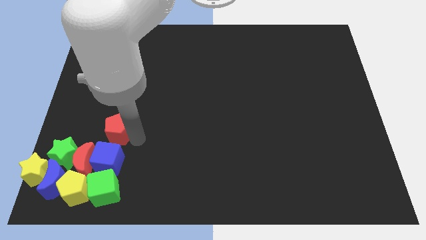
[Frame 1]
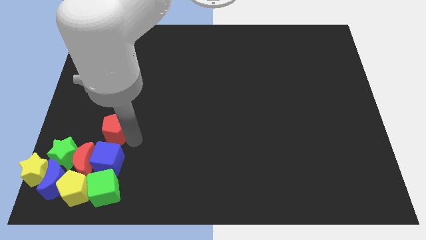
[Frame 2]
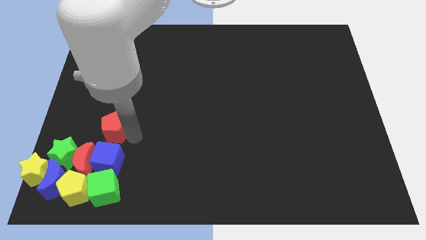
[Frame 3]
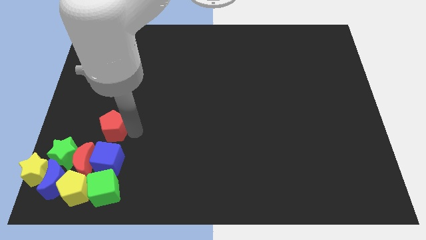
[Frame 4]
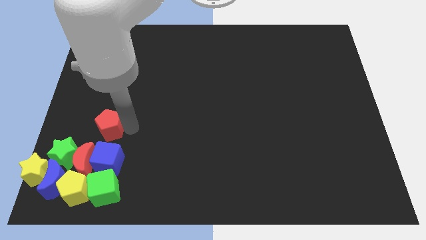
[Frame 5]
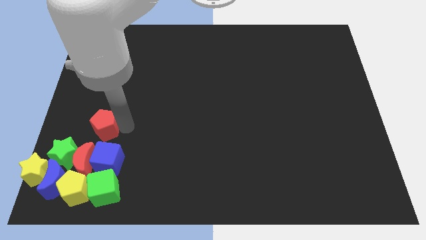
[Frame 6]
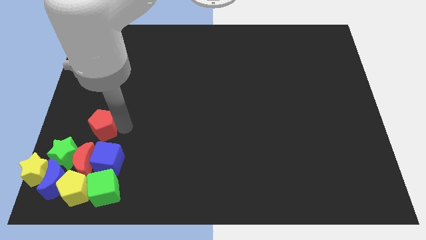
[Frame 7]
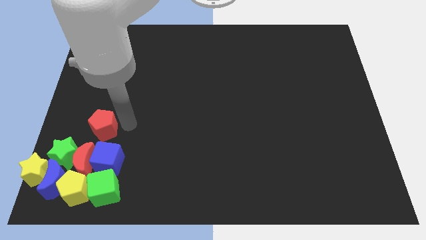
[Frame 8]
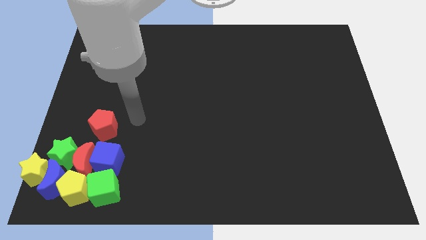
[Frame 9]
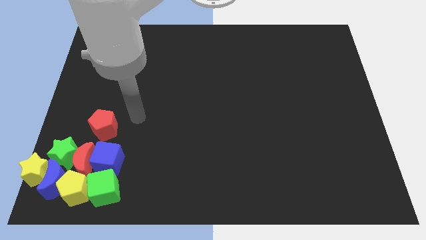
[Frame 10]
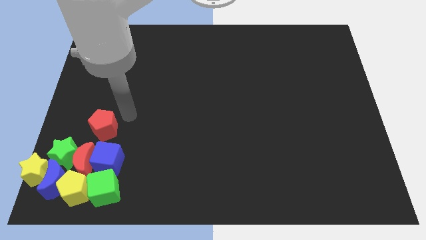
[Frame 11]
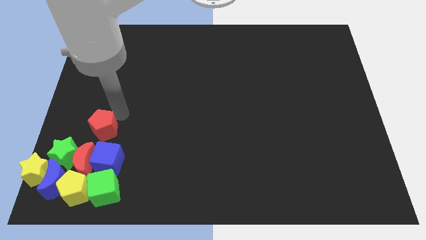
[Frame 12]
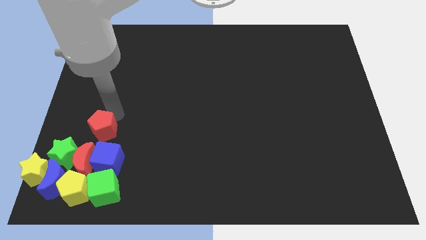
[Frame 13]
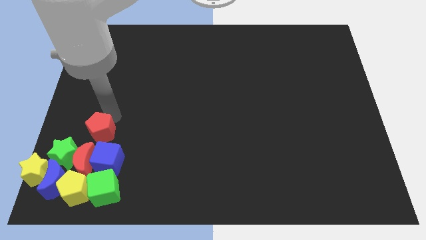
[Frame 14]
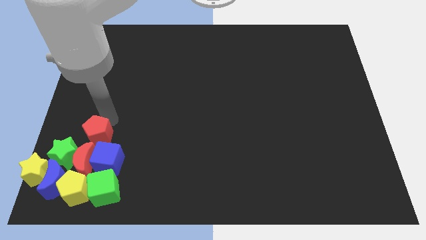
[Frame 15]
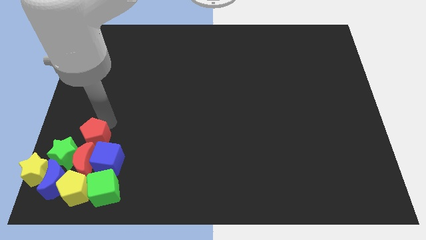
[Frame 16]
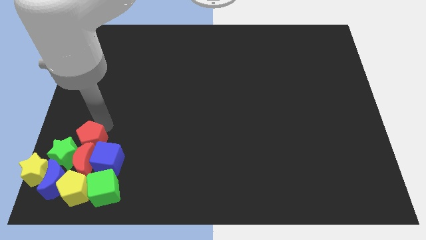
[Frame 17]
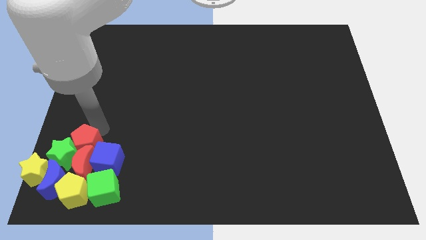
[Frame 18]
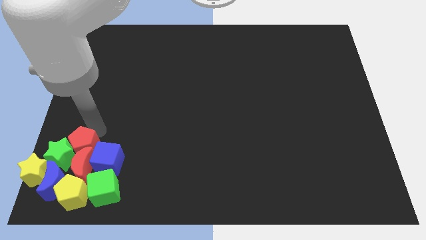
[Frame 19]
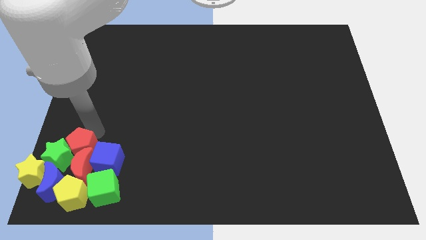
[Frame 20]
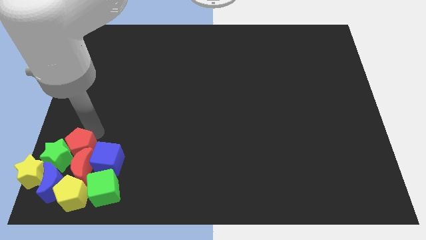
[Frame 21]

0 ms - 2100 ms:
move red pentagon above red crescent

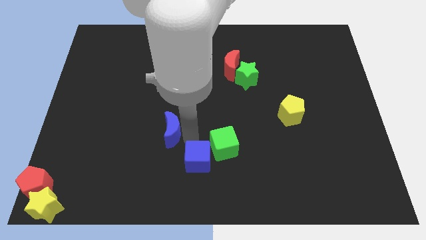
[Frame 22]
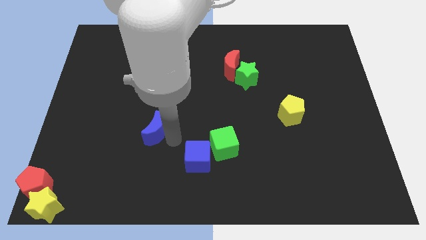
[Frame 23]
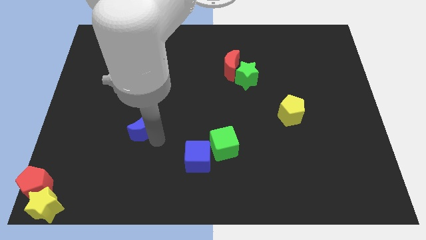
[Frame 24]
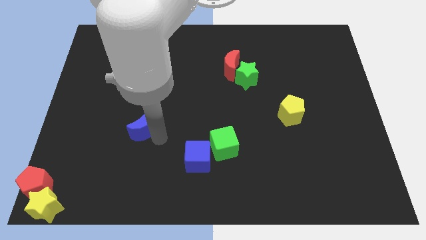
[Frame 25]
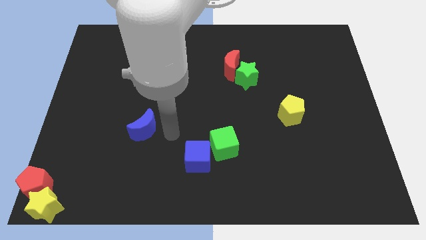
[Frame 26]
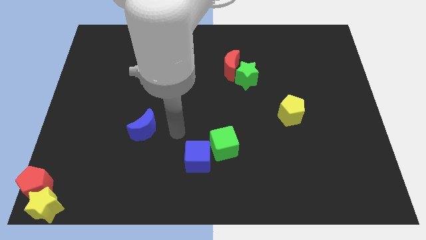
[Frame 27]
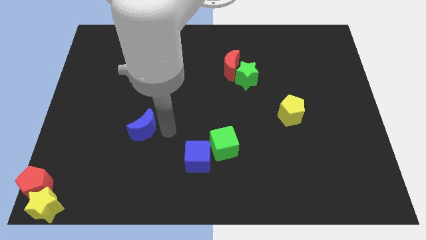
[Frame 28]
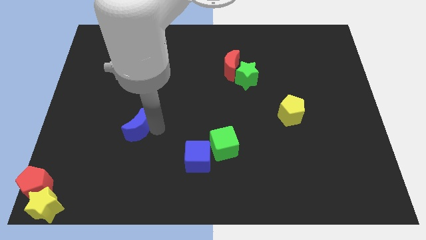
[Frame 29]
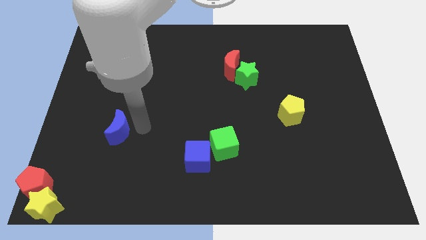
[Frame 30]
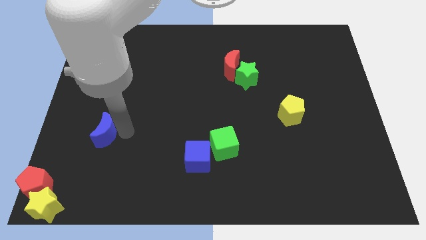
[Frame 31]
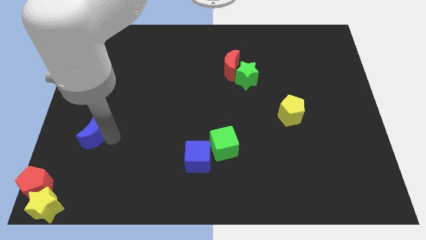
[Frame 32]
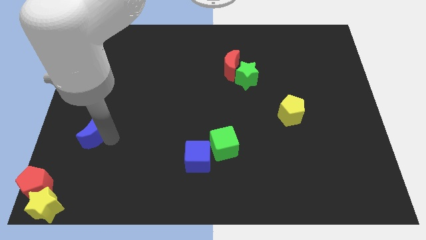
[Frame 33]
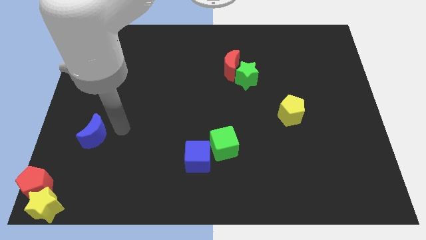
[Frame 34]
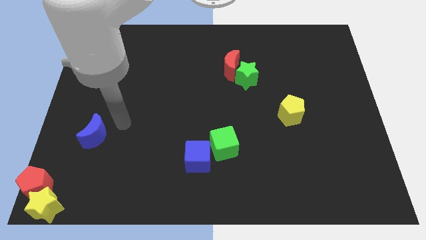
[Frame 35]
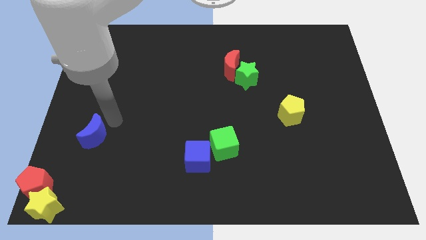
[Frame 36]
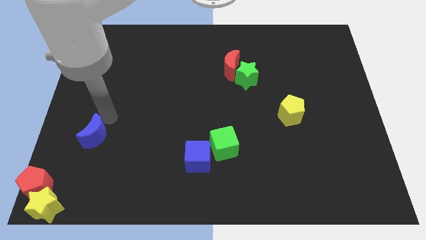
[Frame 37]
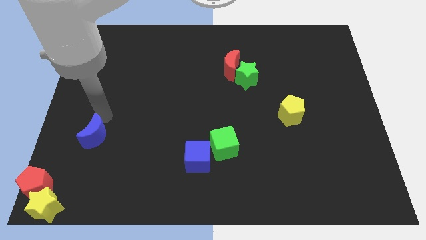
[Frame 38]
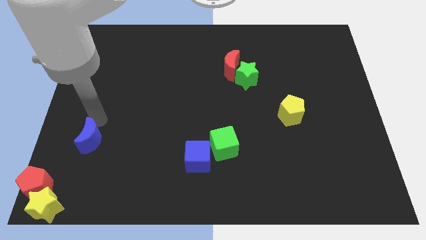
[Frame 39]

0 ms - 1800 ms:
move the blue moon to the center left

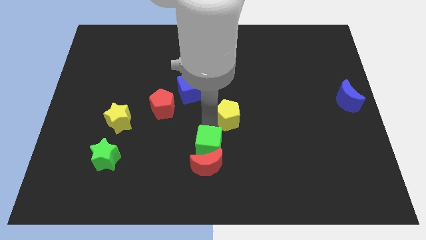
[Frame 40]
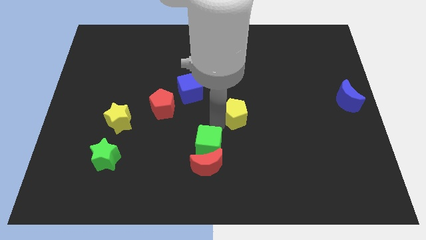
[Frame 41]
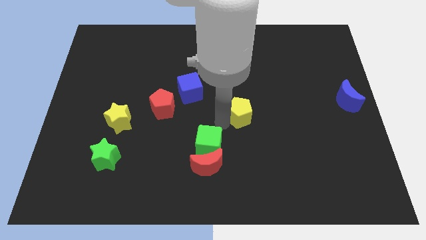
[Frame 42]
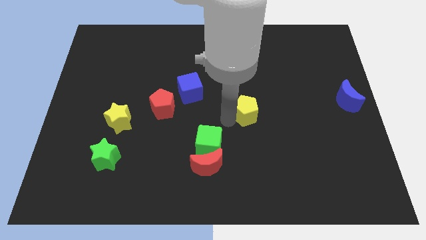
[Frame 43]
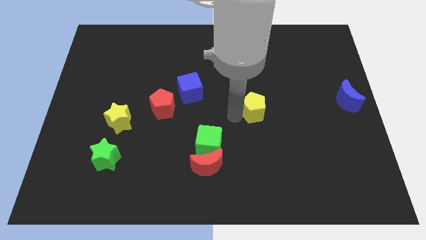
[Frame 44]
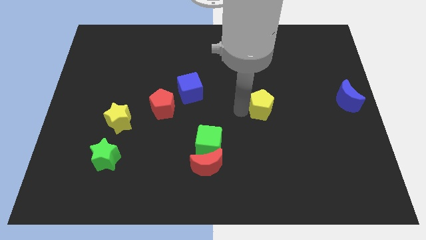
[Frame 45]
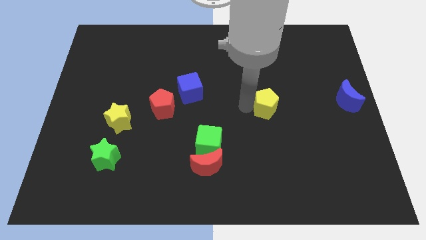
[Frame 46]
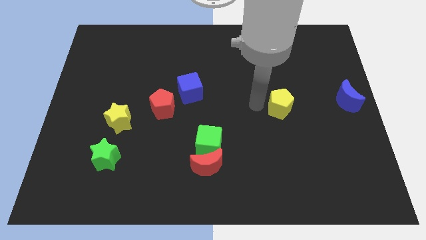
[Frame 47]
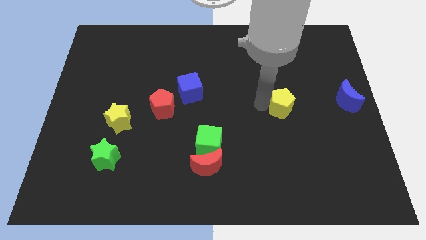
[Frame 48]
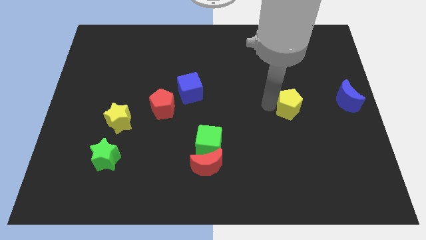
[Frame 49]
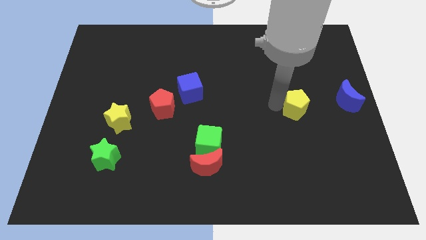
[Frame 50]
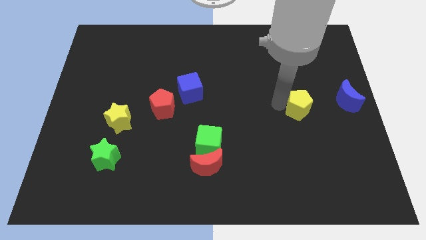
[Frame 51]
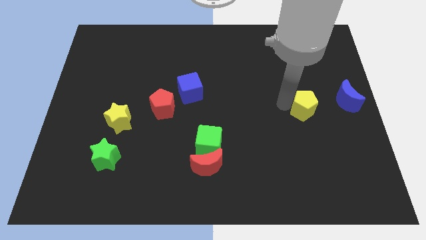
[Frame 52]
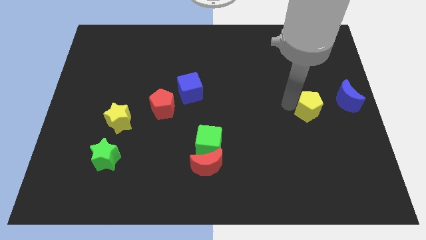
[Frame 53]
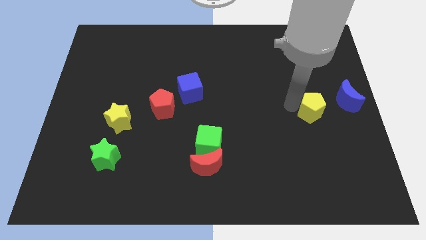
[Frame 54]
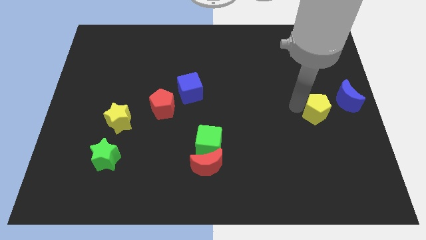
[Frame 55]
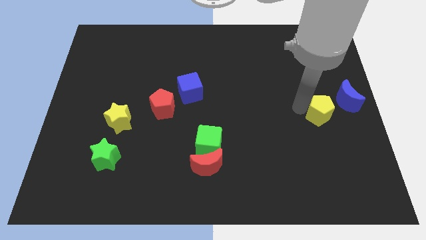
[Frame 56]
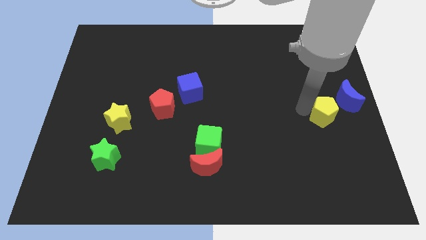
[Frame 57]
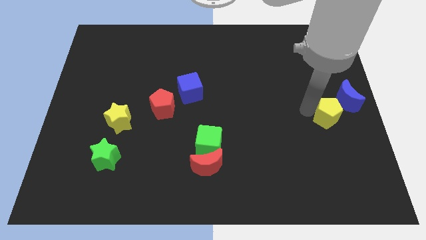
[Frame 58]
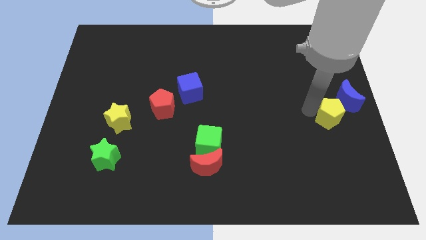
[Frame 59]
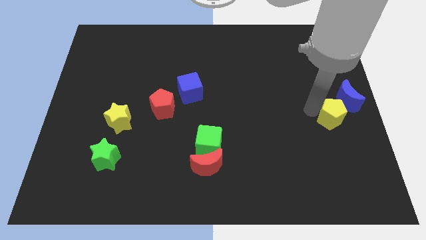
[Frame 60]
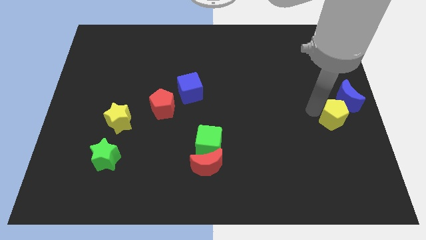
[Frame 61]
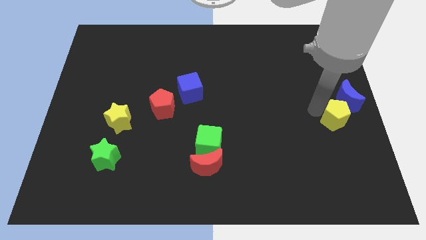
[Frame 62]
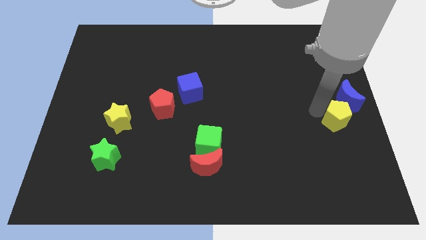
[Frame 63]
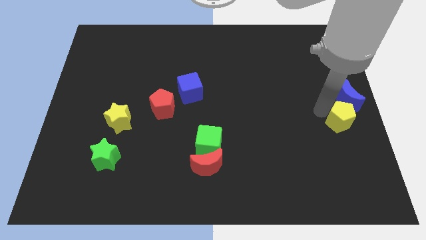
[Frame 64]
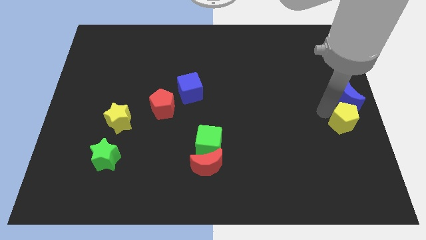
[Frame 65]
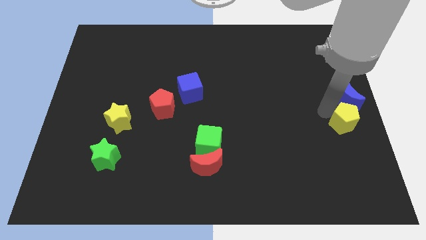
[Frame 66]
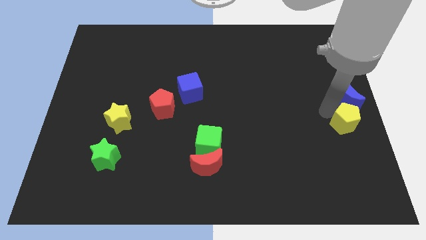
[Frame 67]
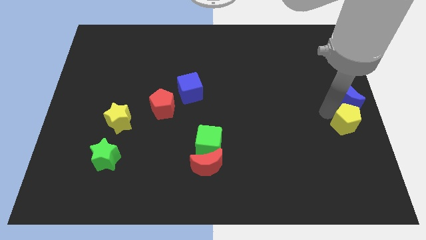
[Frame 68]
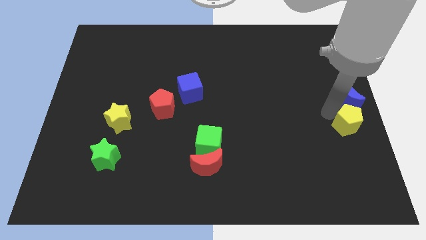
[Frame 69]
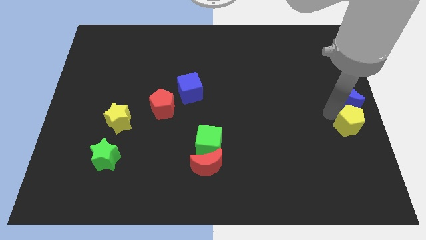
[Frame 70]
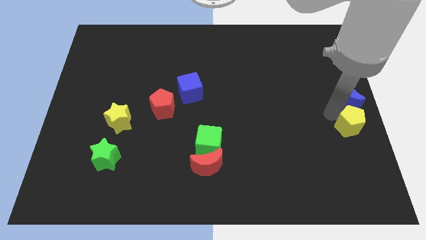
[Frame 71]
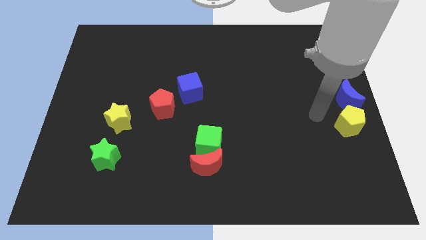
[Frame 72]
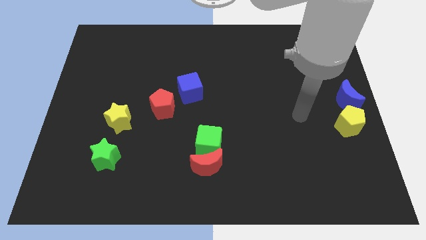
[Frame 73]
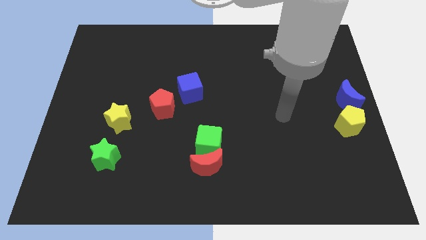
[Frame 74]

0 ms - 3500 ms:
place the yellow pentagon below the blue moon

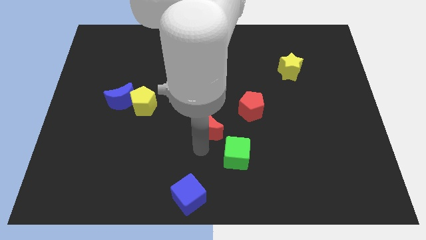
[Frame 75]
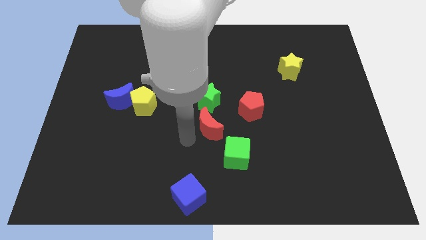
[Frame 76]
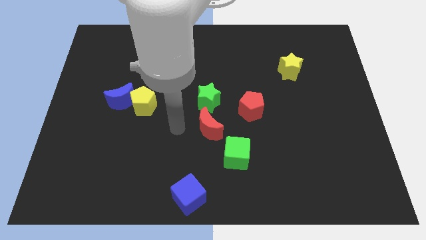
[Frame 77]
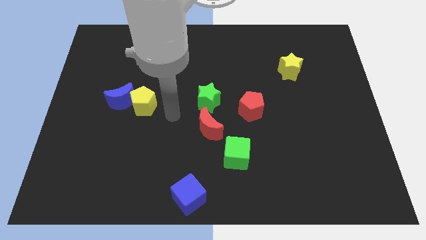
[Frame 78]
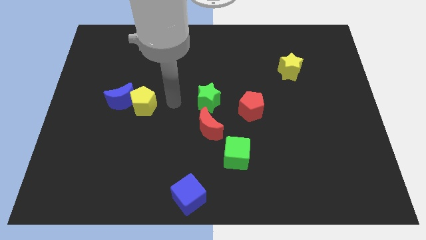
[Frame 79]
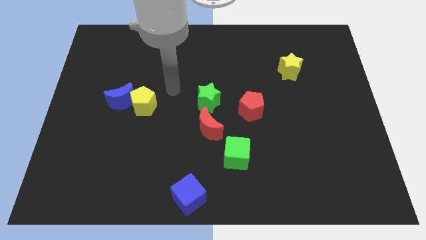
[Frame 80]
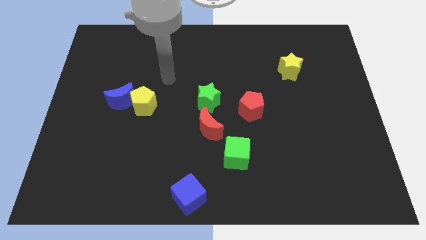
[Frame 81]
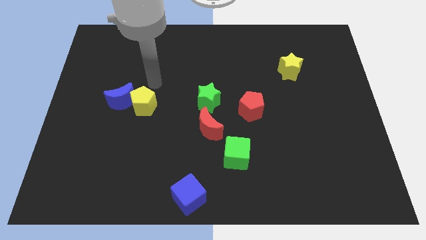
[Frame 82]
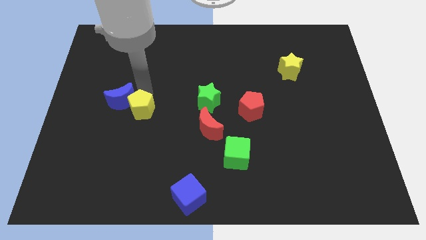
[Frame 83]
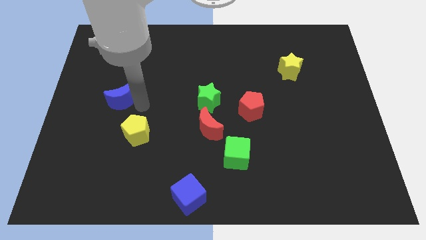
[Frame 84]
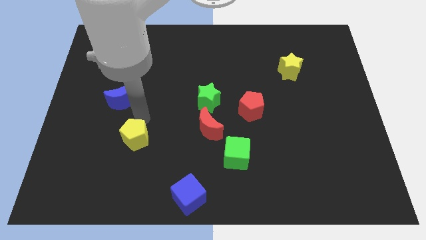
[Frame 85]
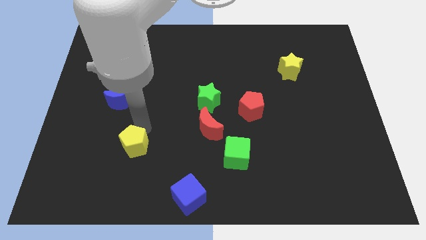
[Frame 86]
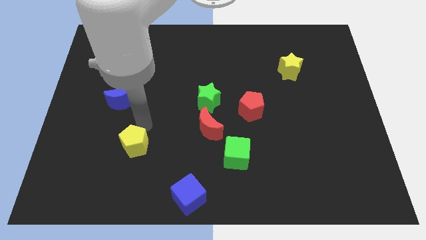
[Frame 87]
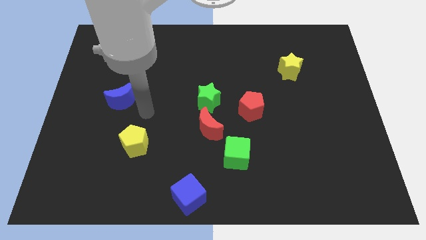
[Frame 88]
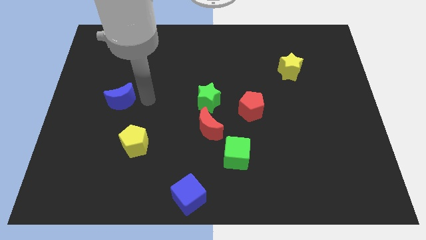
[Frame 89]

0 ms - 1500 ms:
place the yellow pentagon diagonally on the top left side of the blue cube
